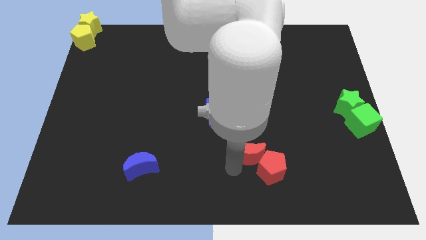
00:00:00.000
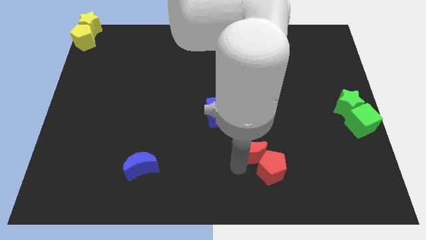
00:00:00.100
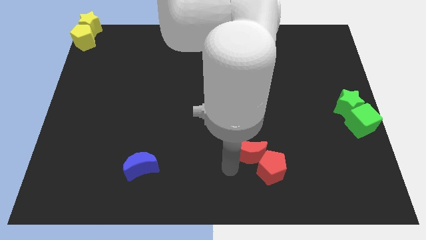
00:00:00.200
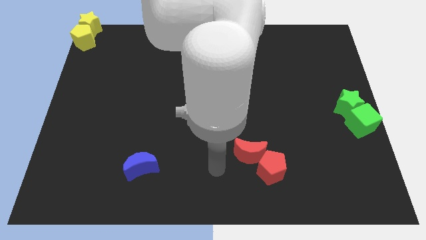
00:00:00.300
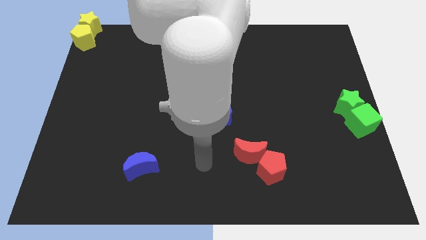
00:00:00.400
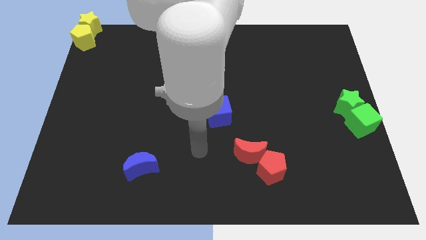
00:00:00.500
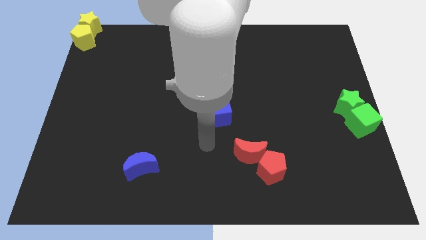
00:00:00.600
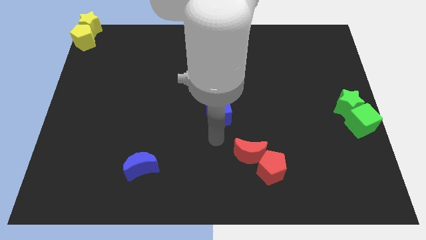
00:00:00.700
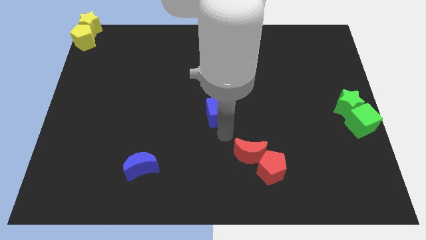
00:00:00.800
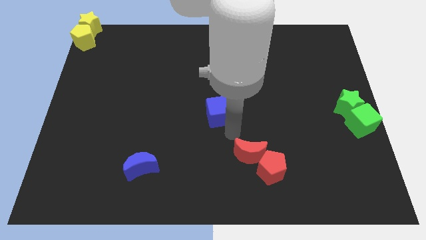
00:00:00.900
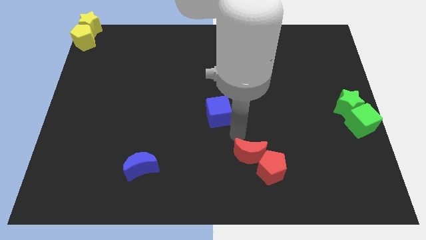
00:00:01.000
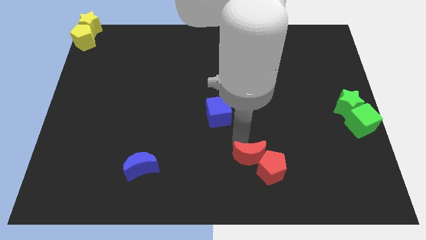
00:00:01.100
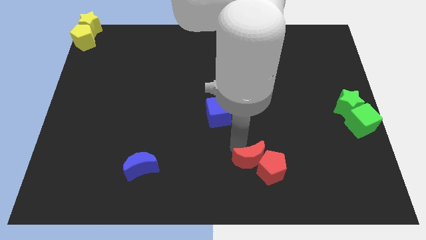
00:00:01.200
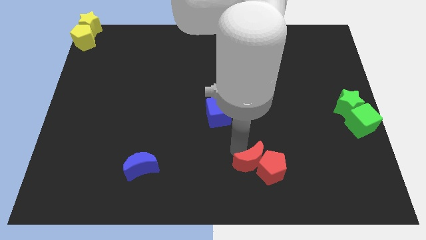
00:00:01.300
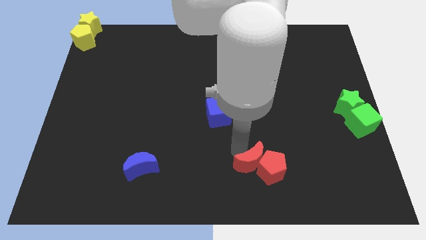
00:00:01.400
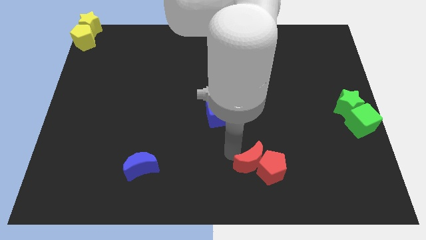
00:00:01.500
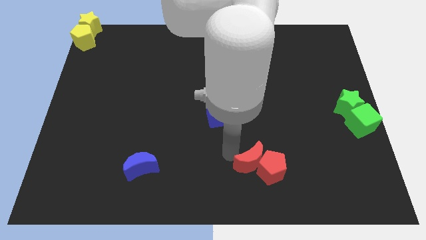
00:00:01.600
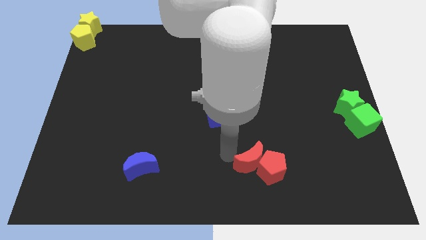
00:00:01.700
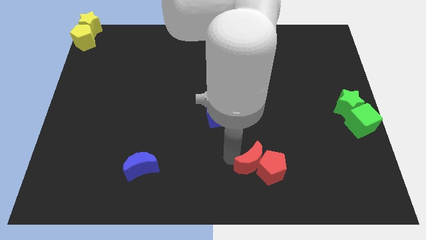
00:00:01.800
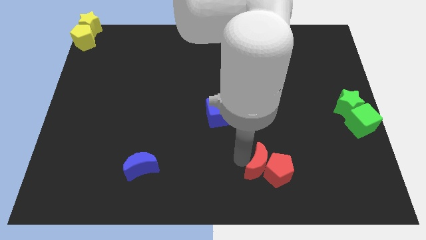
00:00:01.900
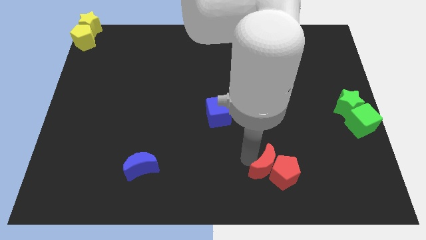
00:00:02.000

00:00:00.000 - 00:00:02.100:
push red crescent near red pentagon

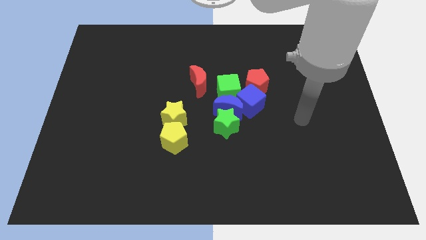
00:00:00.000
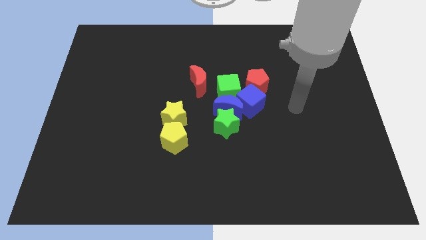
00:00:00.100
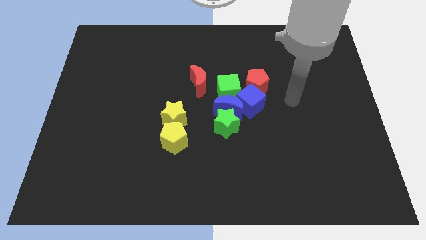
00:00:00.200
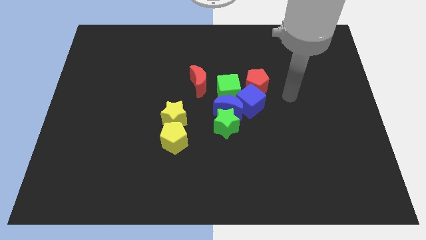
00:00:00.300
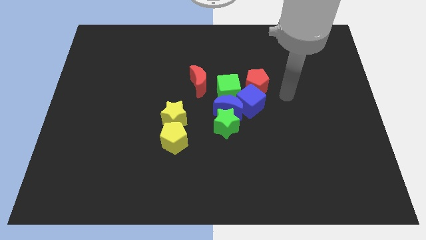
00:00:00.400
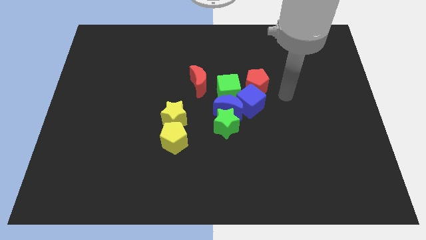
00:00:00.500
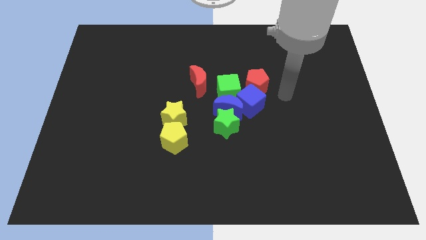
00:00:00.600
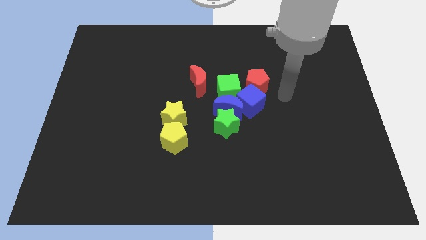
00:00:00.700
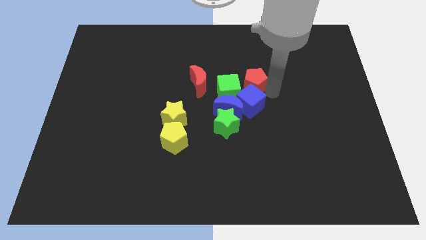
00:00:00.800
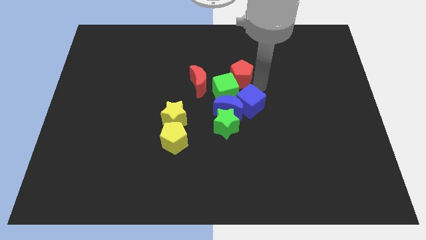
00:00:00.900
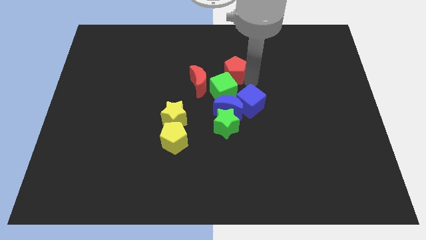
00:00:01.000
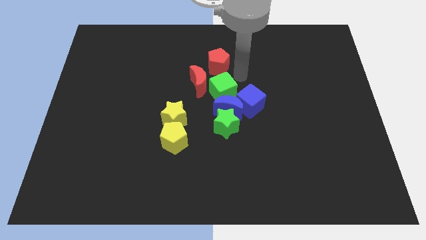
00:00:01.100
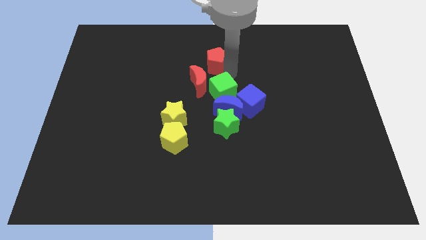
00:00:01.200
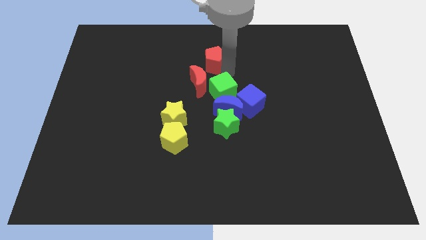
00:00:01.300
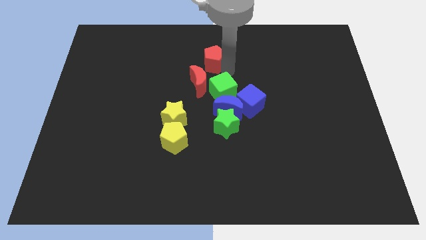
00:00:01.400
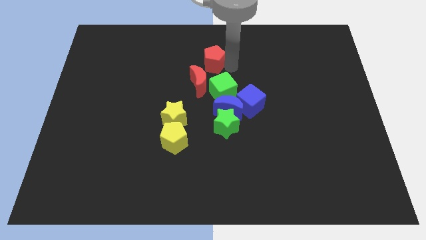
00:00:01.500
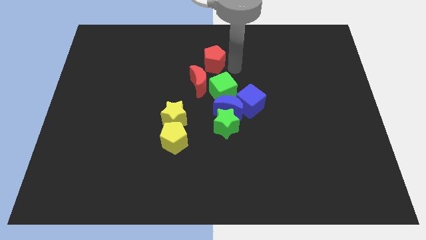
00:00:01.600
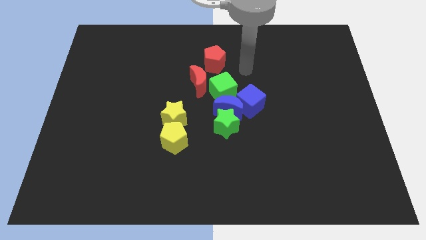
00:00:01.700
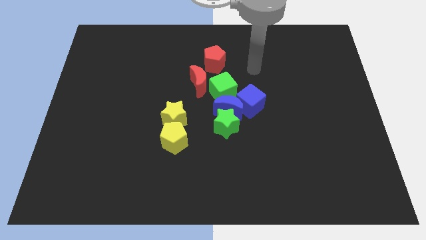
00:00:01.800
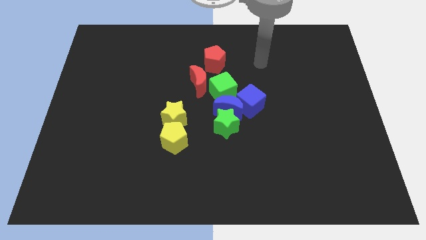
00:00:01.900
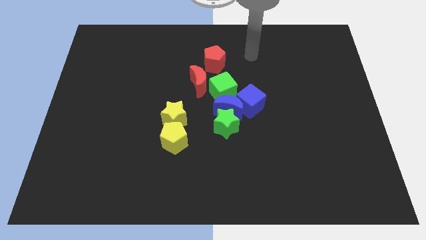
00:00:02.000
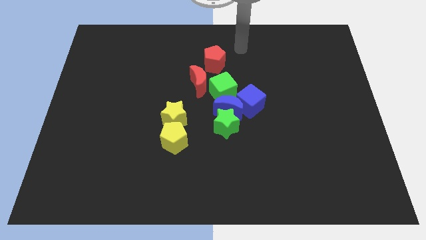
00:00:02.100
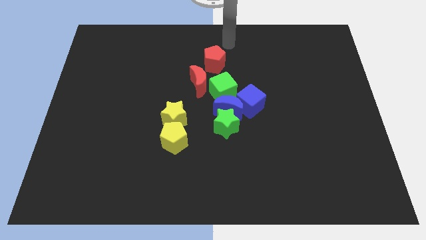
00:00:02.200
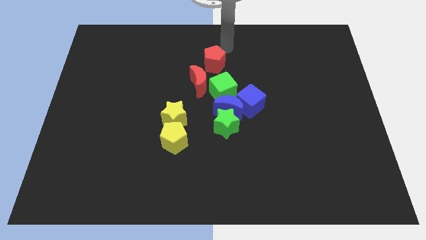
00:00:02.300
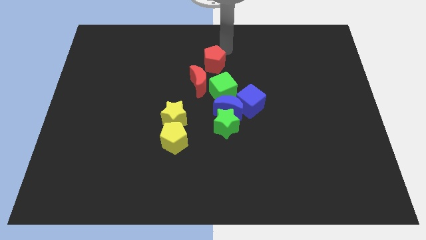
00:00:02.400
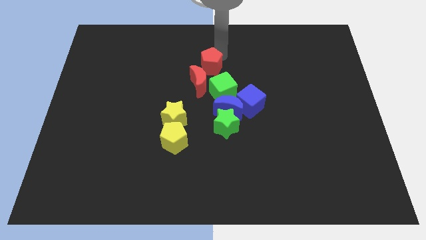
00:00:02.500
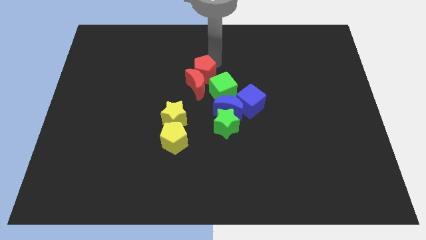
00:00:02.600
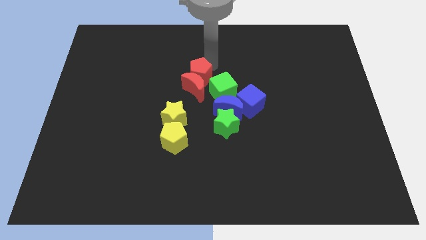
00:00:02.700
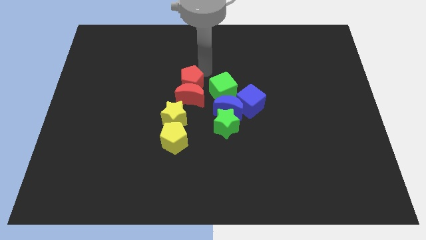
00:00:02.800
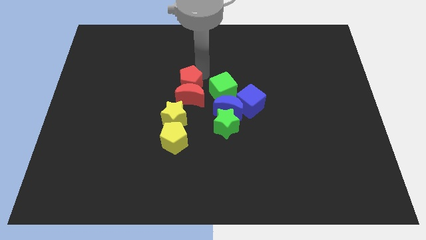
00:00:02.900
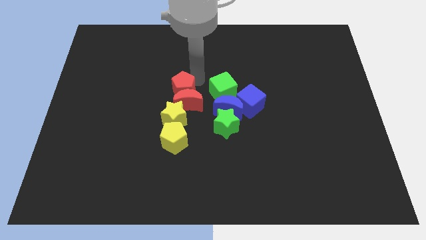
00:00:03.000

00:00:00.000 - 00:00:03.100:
push the red pentagon into the red moon

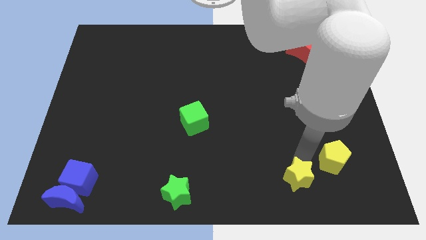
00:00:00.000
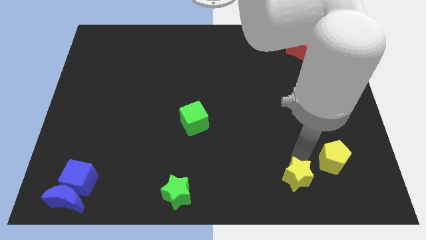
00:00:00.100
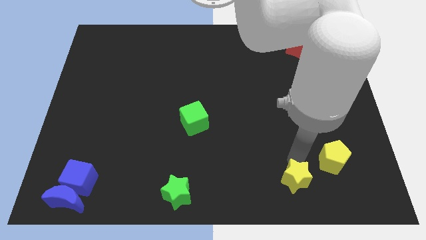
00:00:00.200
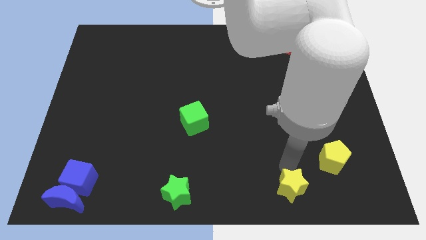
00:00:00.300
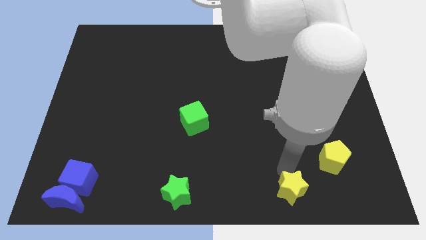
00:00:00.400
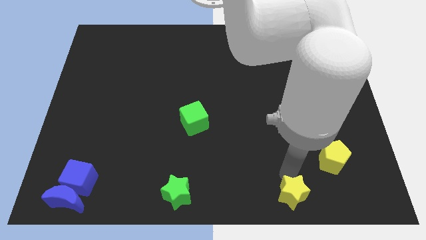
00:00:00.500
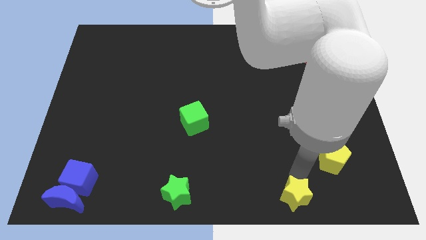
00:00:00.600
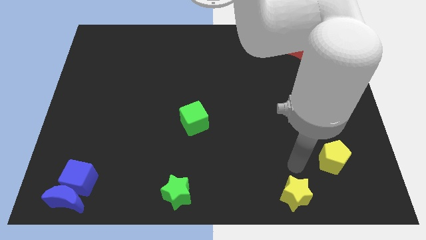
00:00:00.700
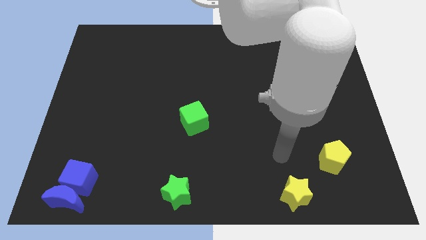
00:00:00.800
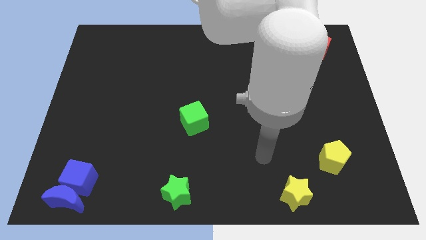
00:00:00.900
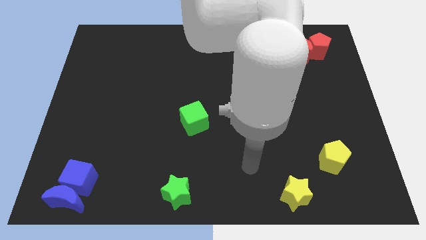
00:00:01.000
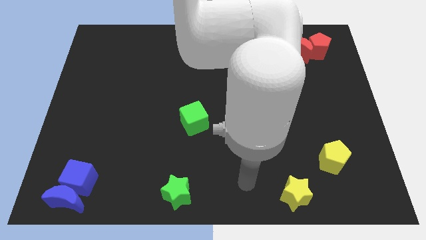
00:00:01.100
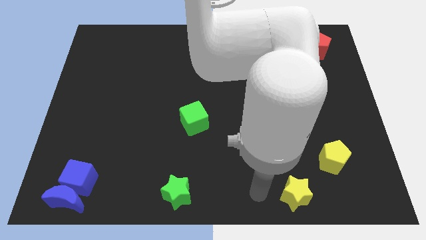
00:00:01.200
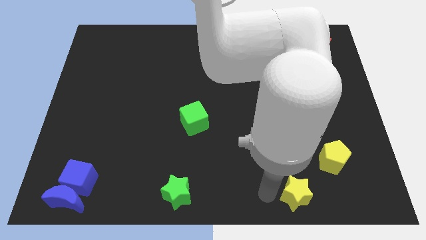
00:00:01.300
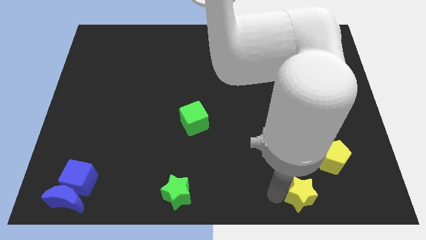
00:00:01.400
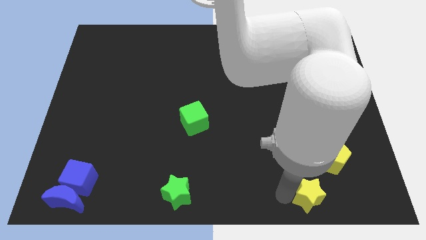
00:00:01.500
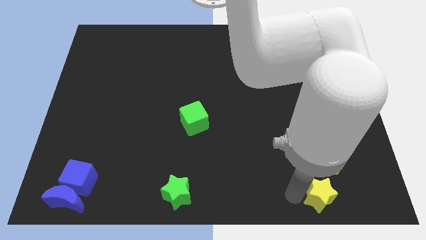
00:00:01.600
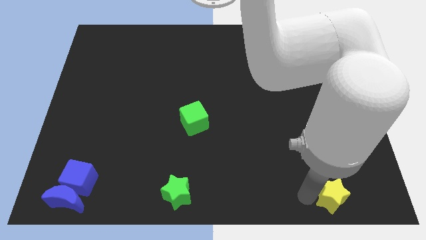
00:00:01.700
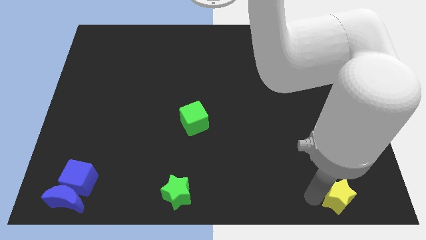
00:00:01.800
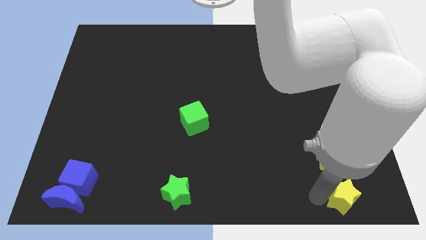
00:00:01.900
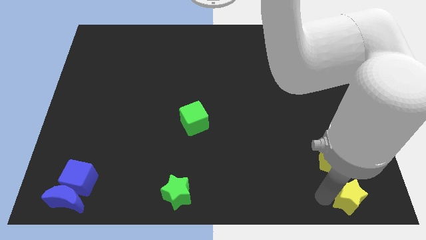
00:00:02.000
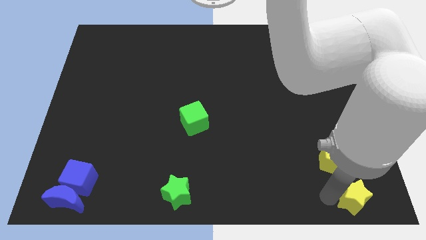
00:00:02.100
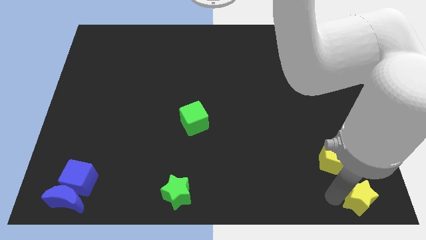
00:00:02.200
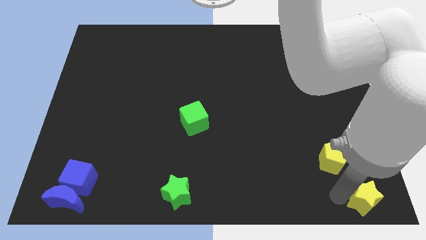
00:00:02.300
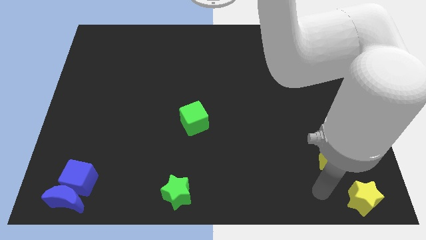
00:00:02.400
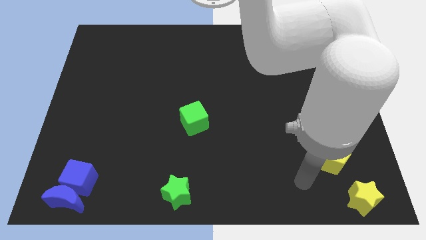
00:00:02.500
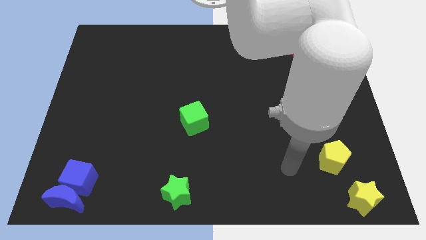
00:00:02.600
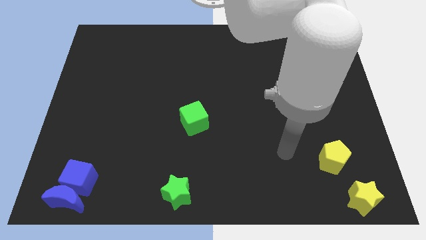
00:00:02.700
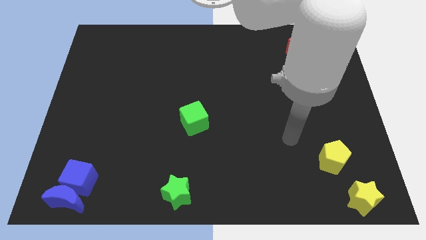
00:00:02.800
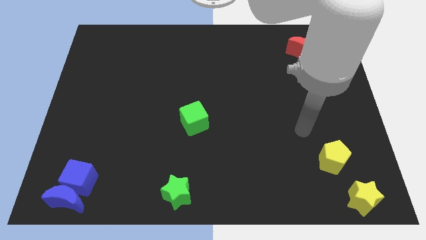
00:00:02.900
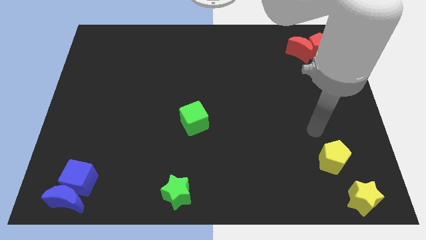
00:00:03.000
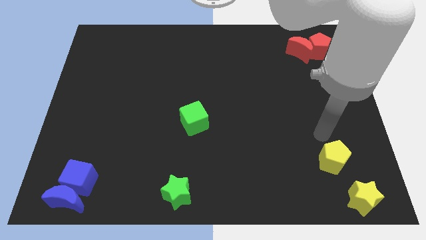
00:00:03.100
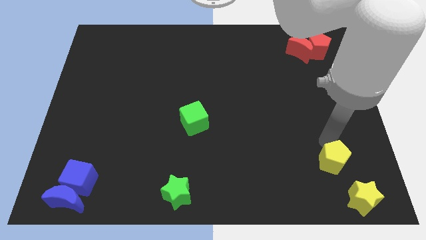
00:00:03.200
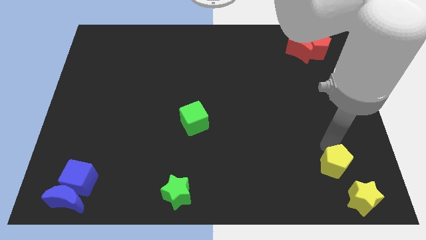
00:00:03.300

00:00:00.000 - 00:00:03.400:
move the yellow star to the right corner

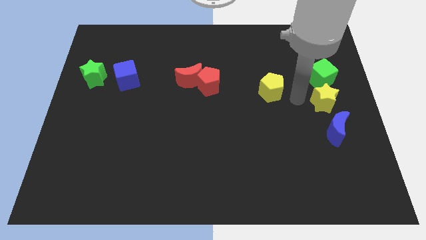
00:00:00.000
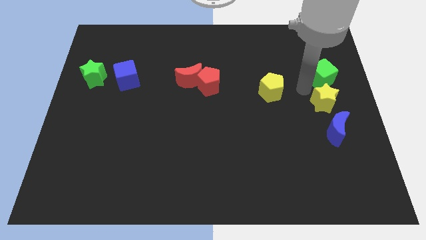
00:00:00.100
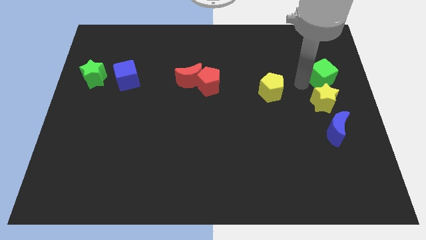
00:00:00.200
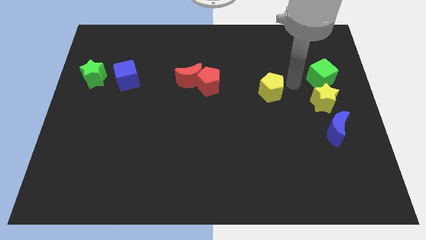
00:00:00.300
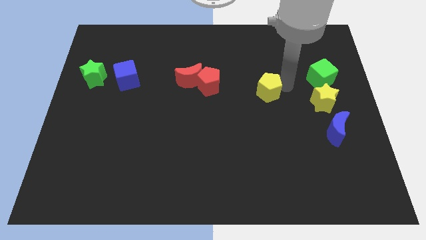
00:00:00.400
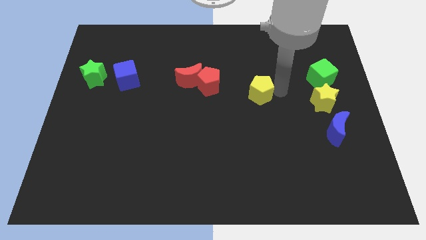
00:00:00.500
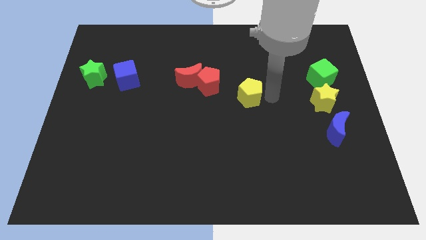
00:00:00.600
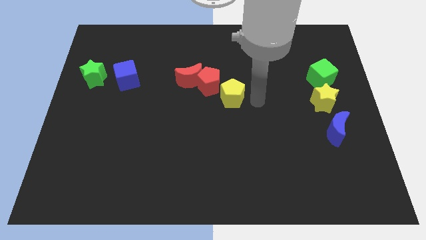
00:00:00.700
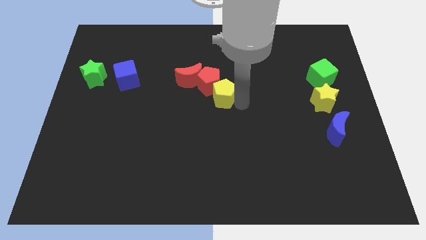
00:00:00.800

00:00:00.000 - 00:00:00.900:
move yellow star diagonally below the red pentagon
